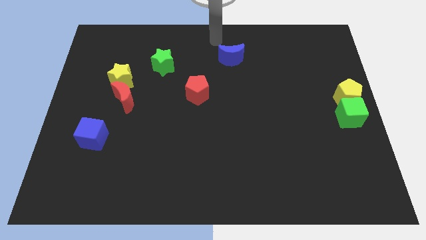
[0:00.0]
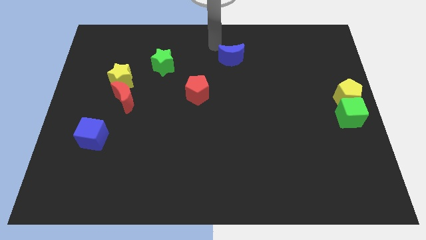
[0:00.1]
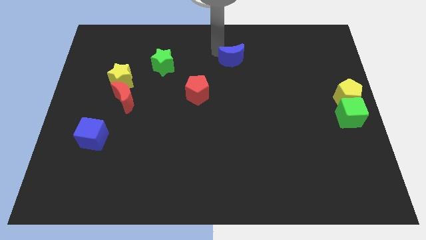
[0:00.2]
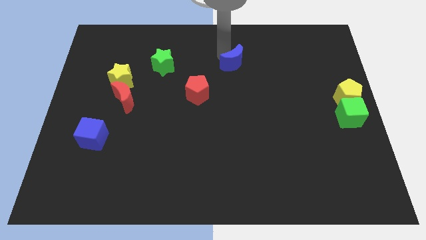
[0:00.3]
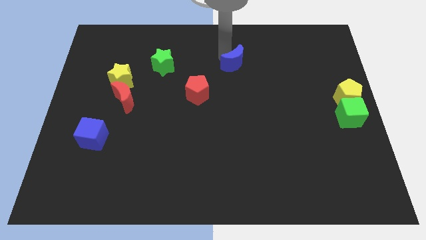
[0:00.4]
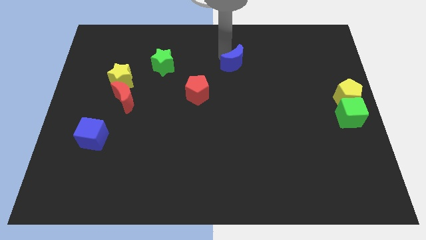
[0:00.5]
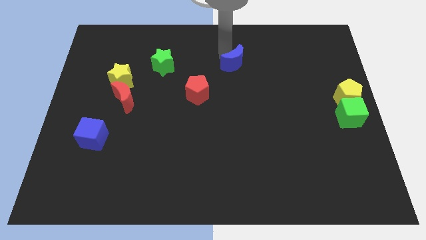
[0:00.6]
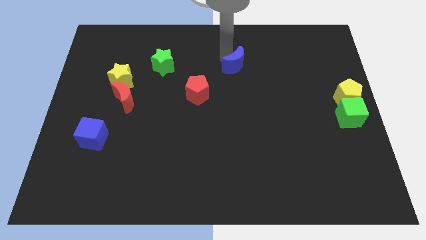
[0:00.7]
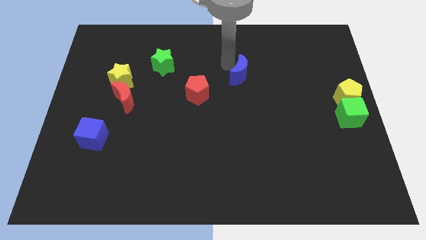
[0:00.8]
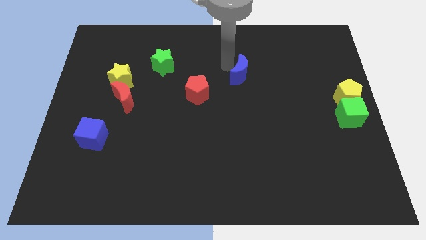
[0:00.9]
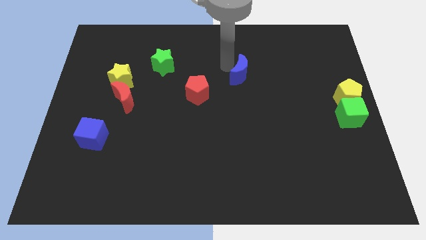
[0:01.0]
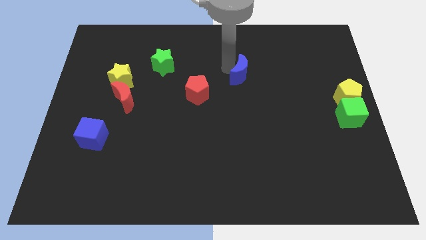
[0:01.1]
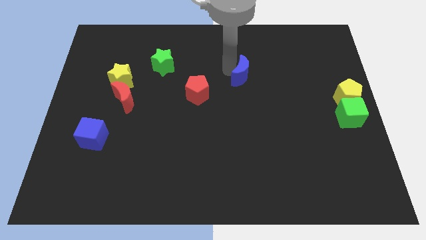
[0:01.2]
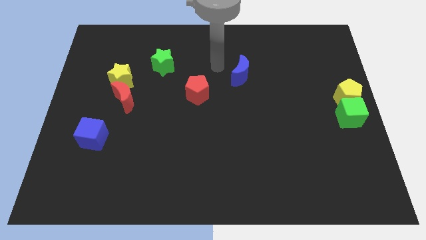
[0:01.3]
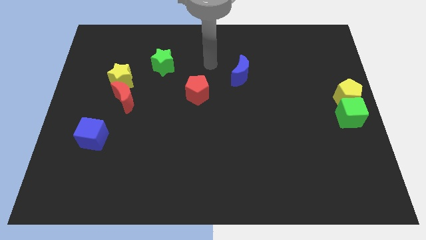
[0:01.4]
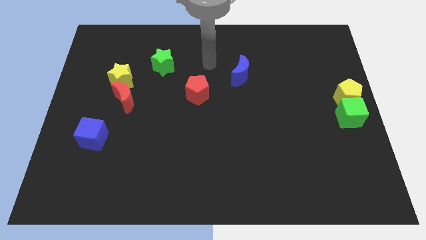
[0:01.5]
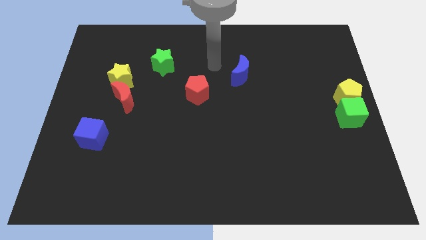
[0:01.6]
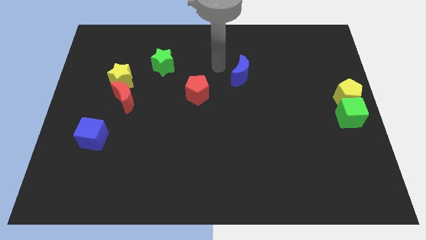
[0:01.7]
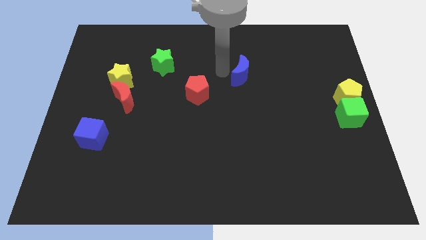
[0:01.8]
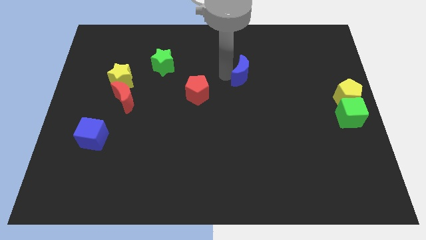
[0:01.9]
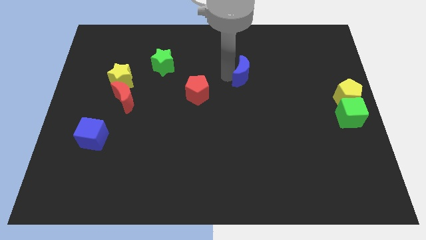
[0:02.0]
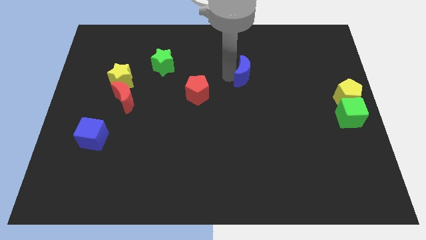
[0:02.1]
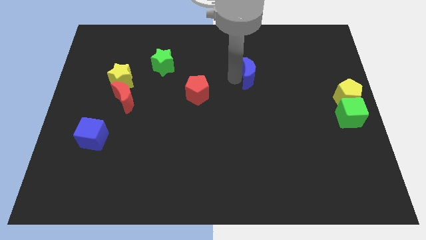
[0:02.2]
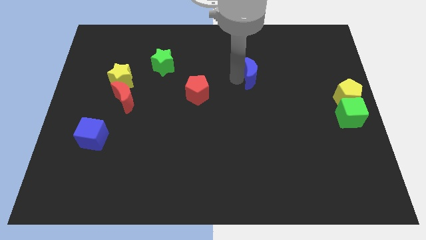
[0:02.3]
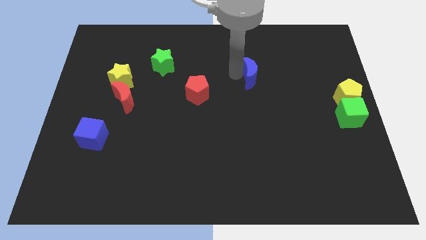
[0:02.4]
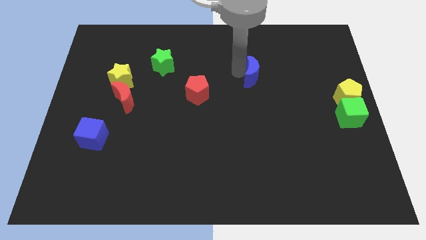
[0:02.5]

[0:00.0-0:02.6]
push the blue moon diagonally towards the right of red pentagon

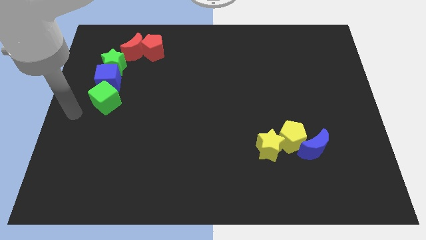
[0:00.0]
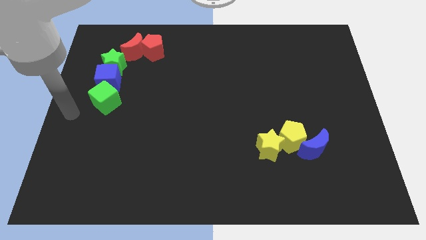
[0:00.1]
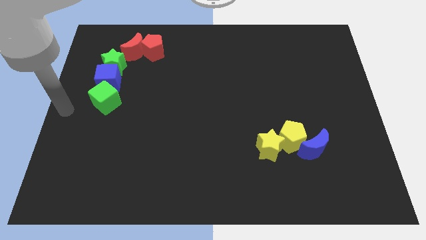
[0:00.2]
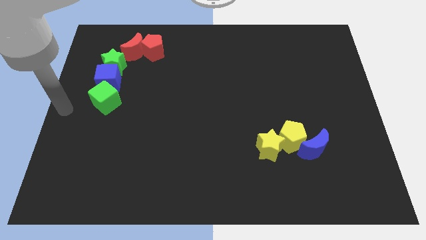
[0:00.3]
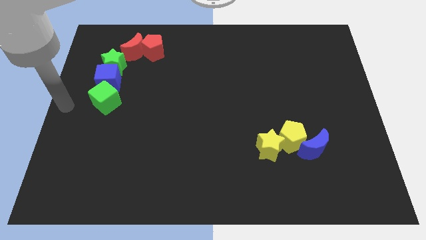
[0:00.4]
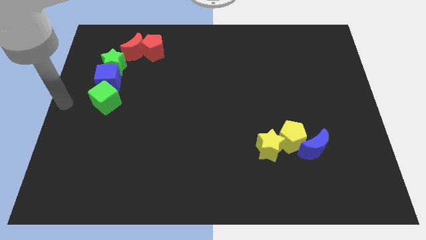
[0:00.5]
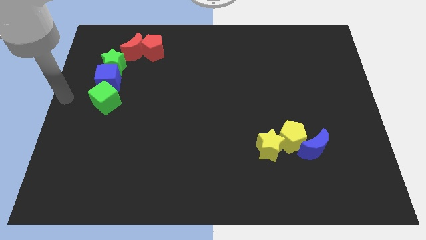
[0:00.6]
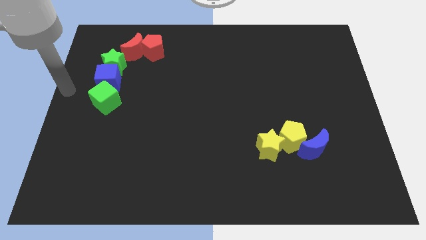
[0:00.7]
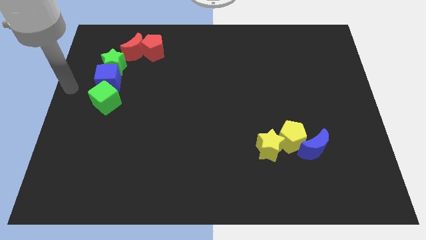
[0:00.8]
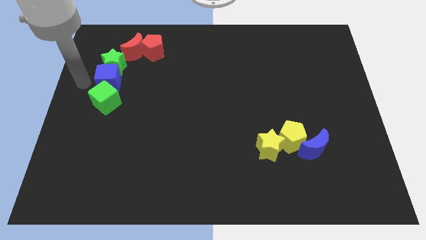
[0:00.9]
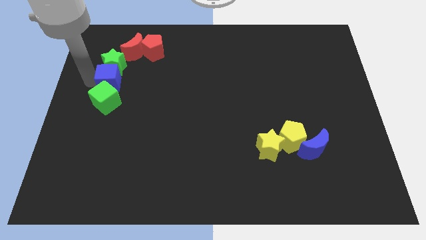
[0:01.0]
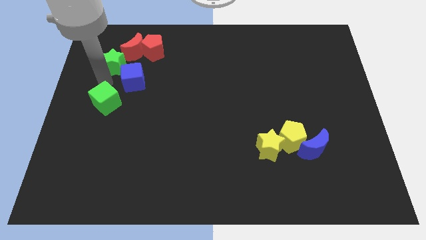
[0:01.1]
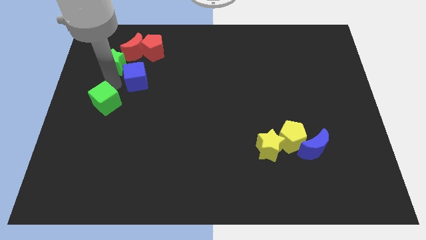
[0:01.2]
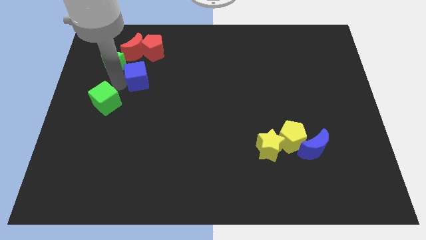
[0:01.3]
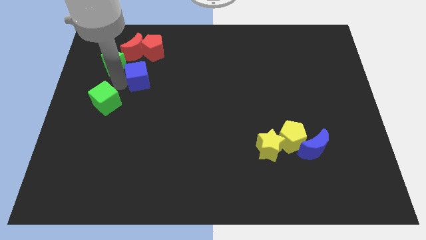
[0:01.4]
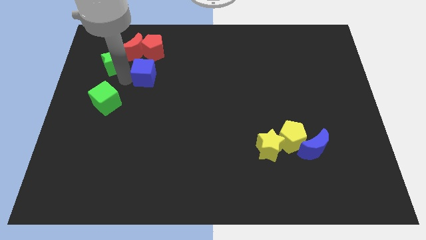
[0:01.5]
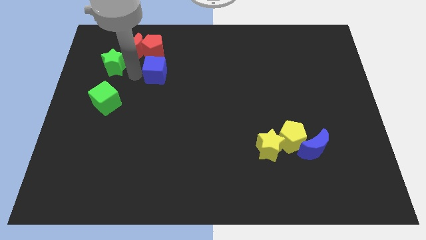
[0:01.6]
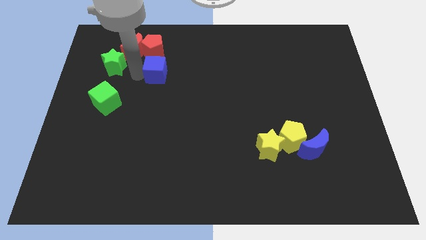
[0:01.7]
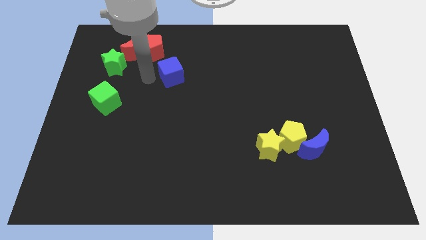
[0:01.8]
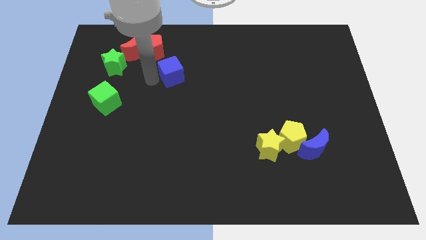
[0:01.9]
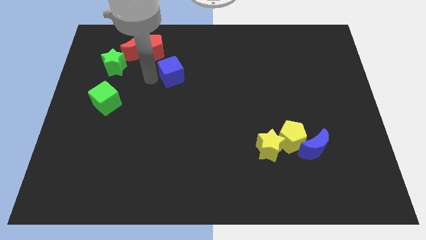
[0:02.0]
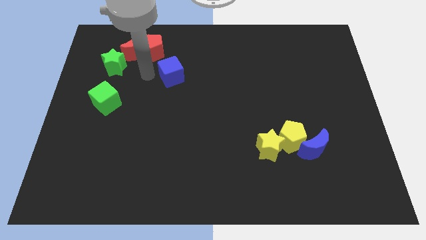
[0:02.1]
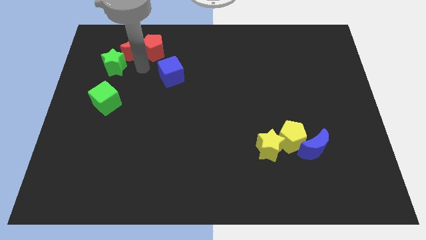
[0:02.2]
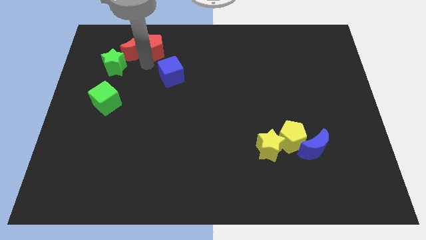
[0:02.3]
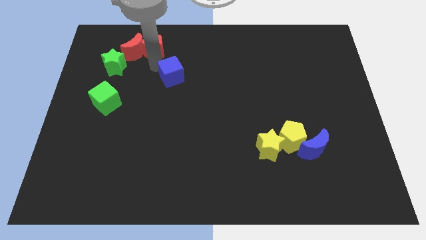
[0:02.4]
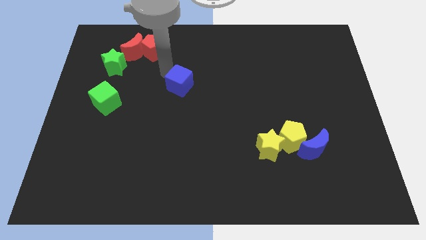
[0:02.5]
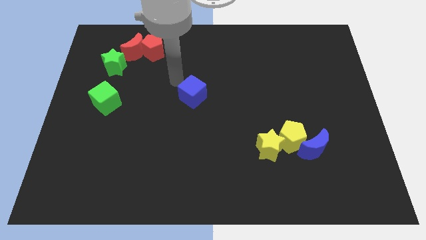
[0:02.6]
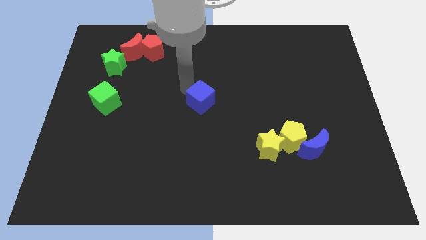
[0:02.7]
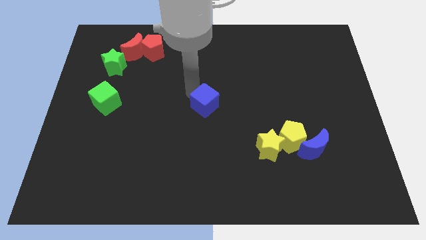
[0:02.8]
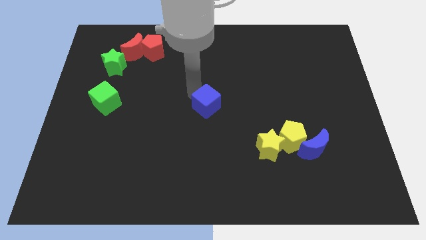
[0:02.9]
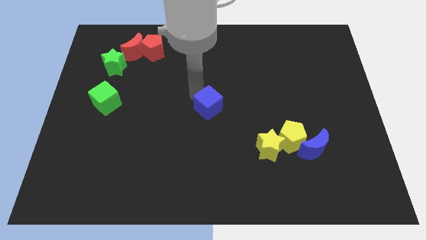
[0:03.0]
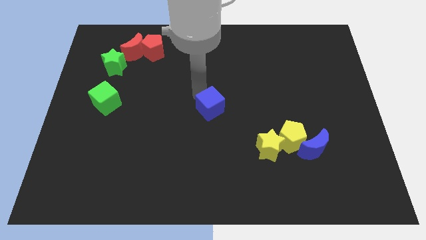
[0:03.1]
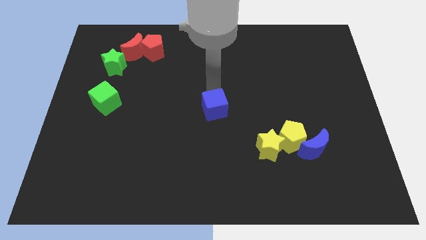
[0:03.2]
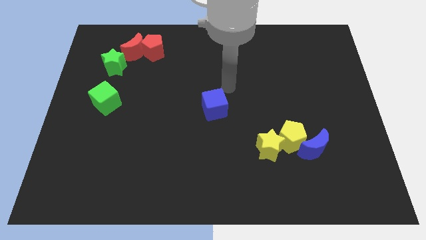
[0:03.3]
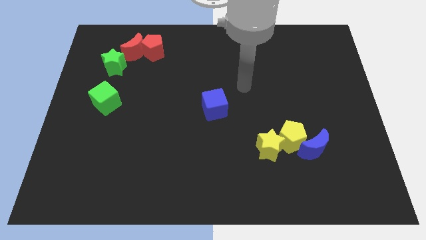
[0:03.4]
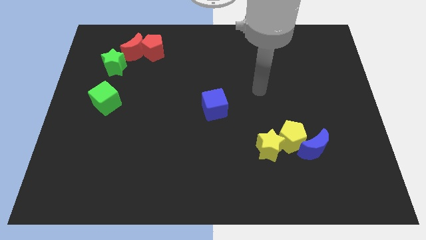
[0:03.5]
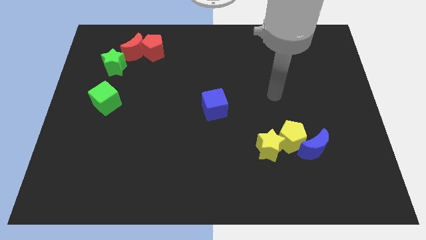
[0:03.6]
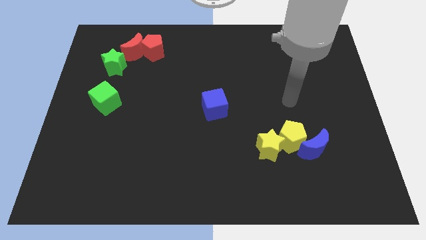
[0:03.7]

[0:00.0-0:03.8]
slide the blue cube to the center of the board

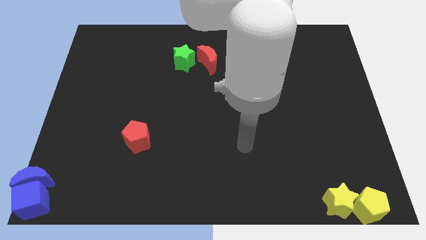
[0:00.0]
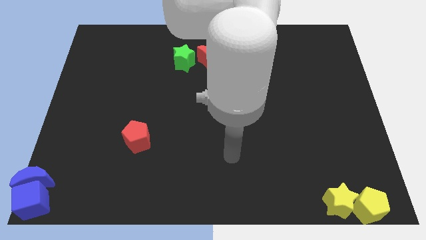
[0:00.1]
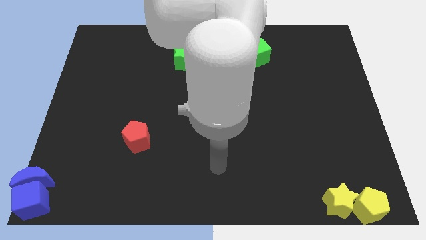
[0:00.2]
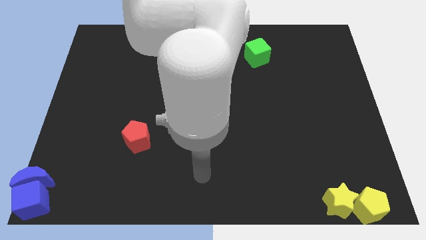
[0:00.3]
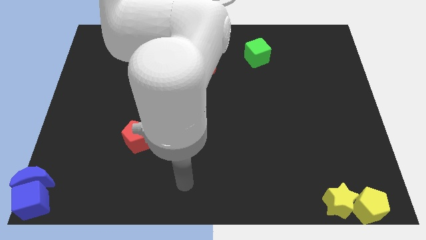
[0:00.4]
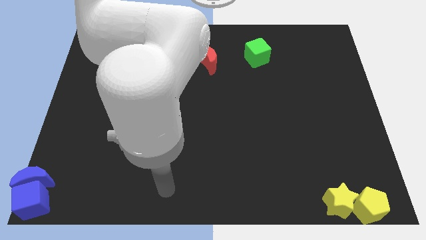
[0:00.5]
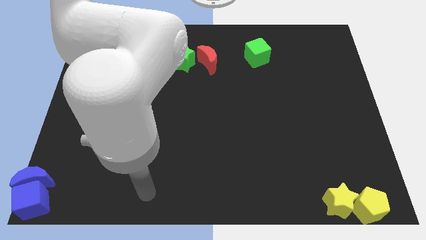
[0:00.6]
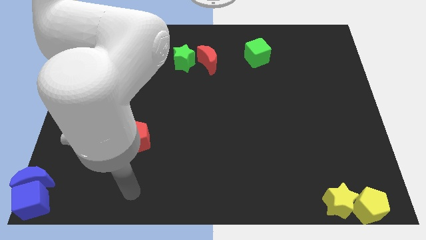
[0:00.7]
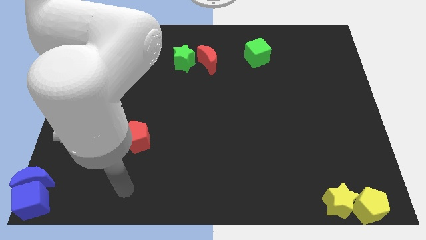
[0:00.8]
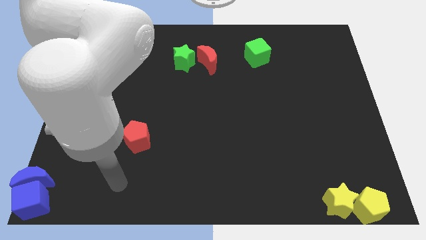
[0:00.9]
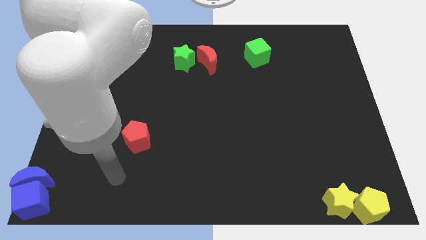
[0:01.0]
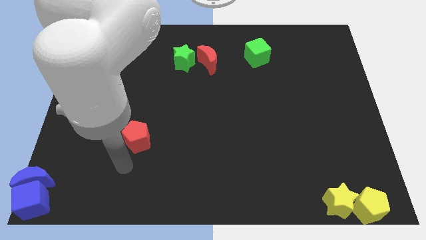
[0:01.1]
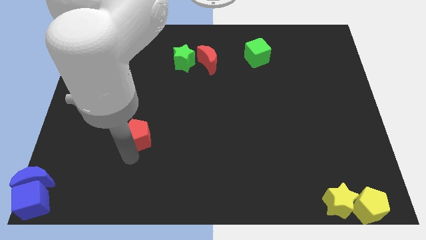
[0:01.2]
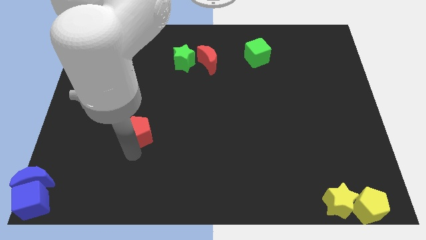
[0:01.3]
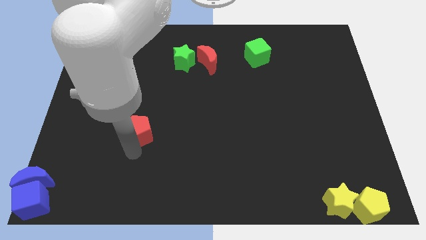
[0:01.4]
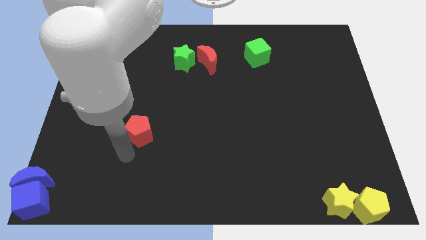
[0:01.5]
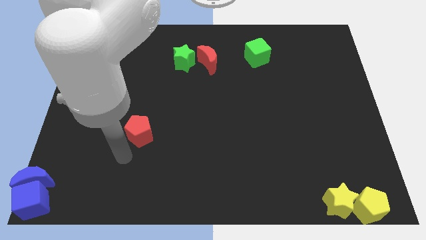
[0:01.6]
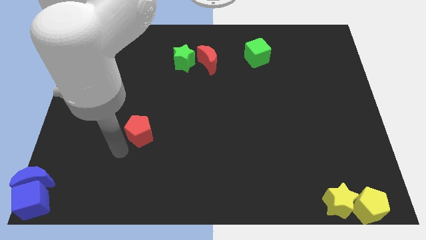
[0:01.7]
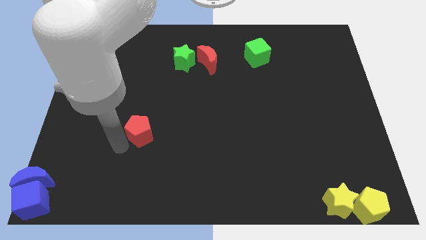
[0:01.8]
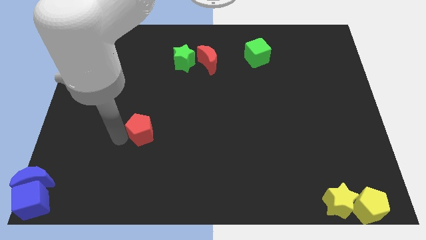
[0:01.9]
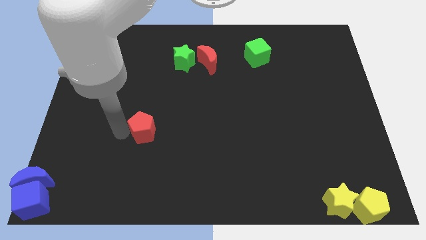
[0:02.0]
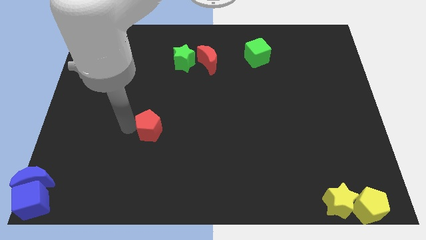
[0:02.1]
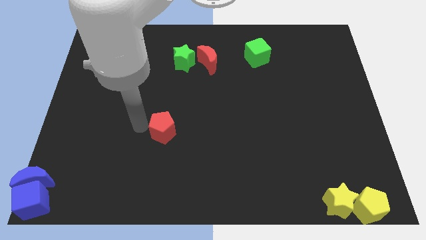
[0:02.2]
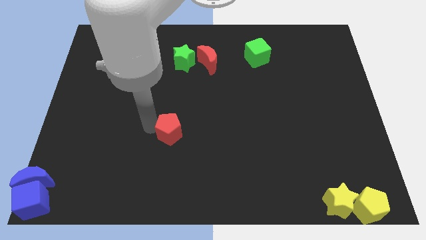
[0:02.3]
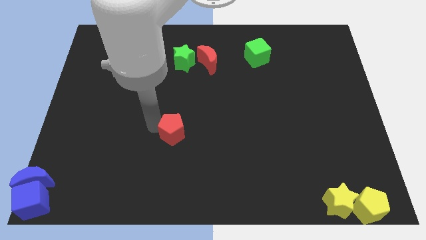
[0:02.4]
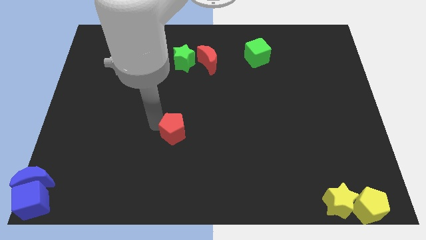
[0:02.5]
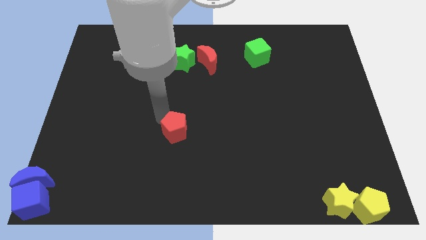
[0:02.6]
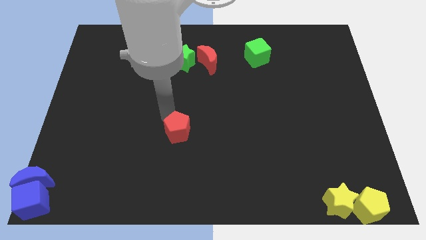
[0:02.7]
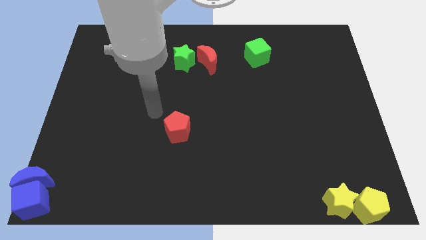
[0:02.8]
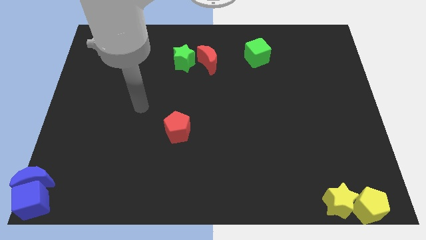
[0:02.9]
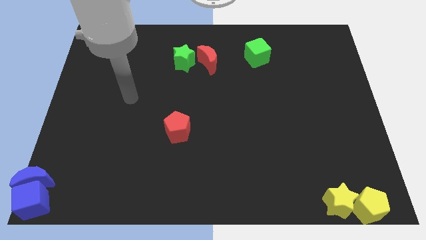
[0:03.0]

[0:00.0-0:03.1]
move the red pentagon slightly up towards the center of the board
